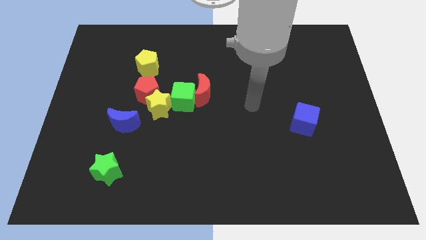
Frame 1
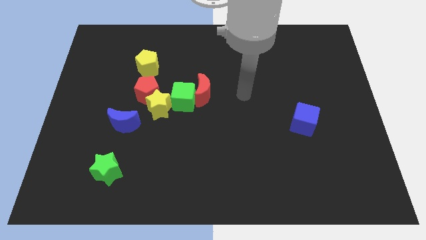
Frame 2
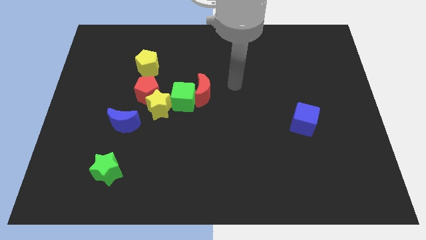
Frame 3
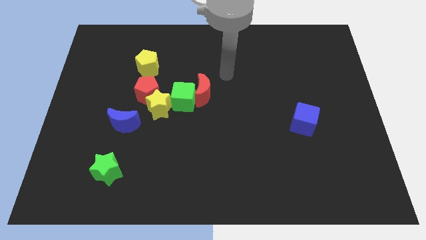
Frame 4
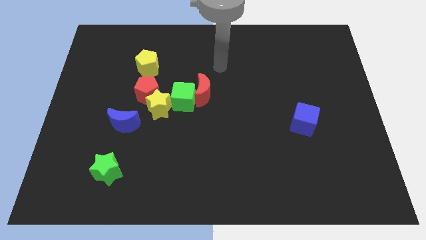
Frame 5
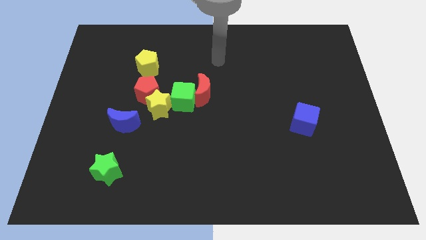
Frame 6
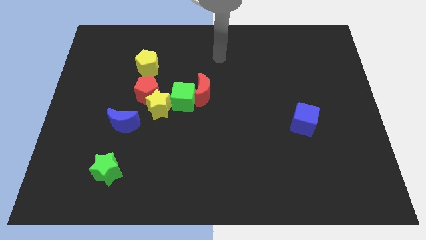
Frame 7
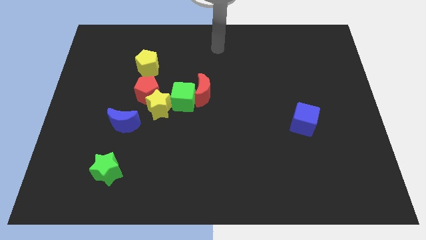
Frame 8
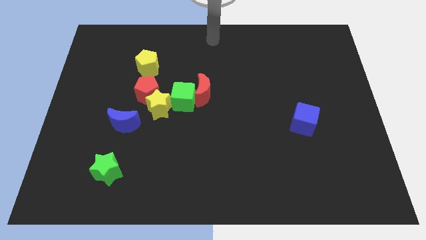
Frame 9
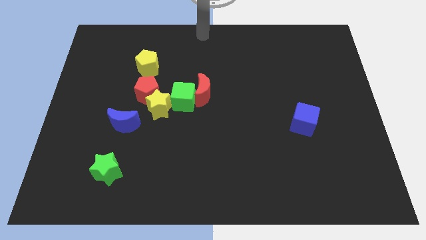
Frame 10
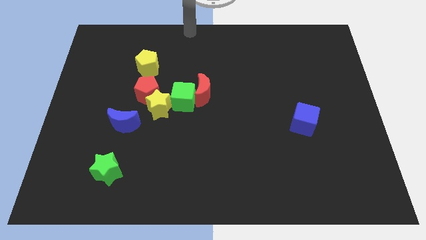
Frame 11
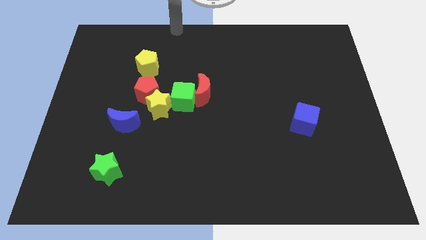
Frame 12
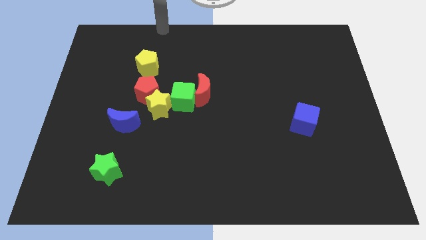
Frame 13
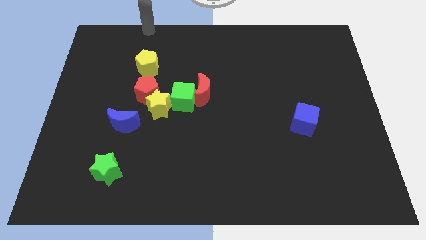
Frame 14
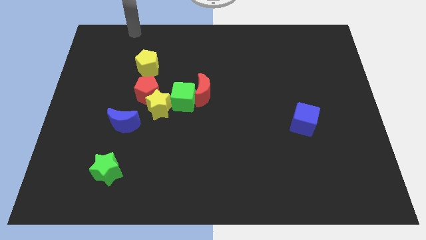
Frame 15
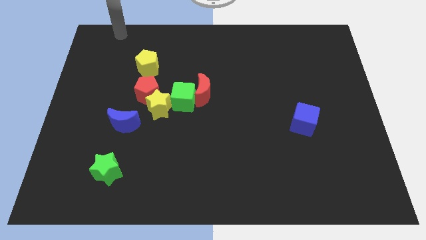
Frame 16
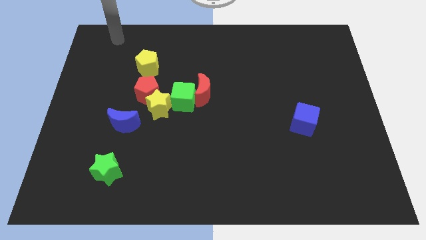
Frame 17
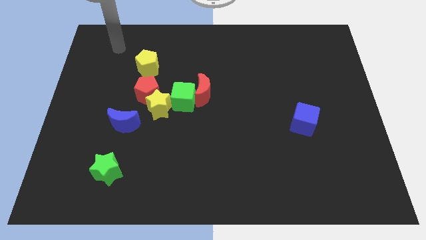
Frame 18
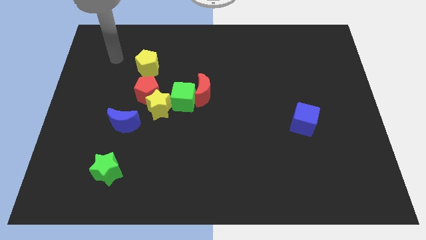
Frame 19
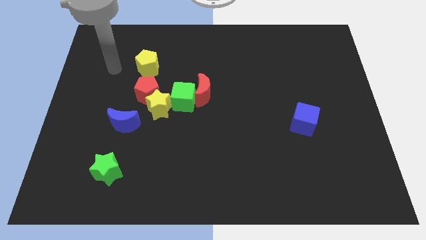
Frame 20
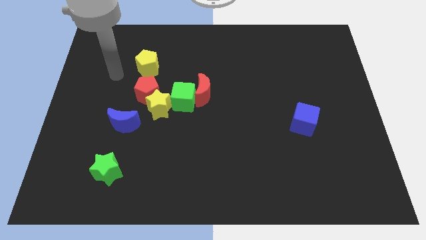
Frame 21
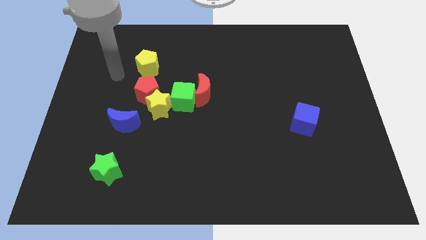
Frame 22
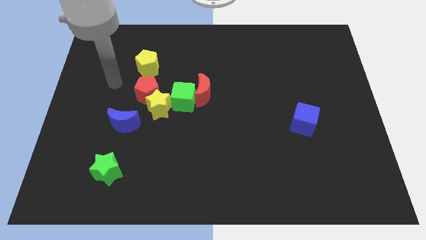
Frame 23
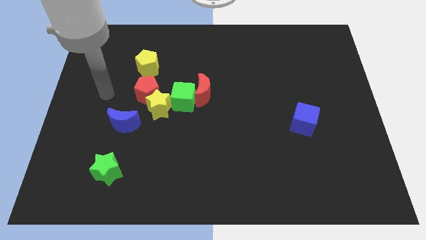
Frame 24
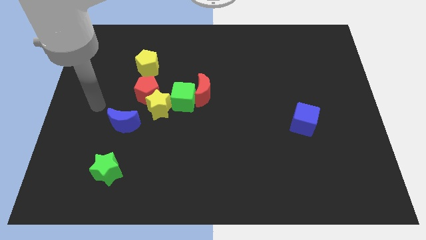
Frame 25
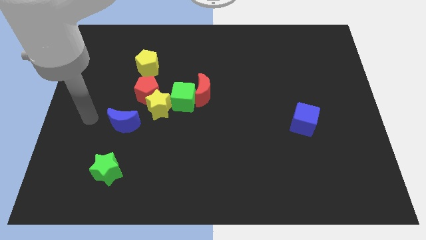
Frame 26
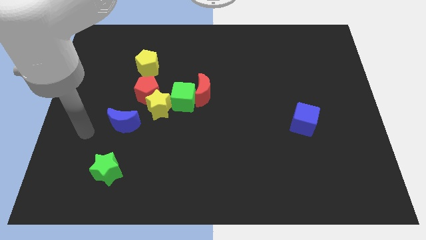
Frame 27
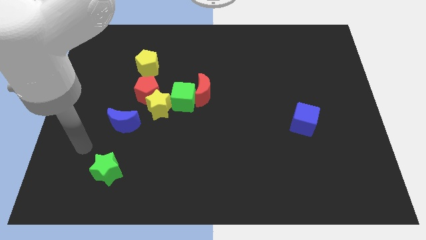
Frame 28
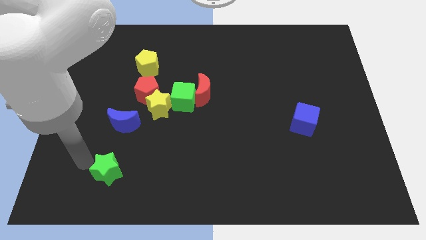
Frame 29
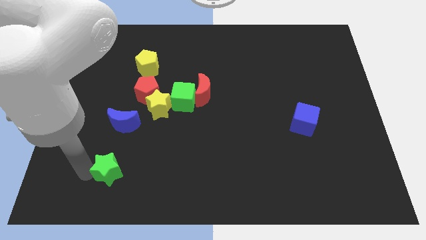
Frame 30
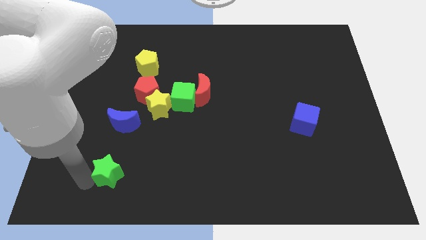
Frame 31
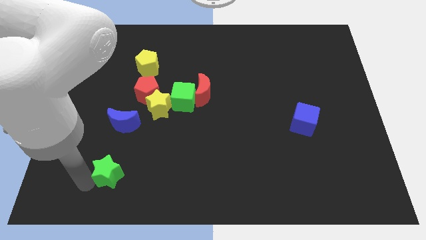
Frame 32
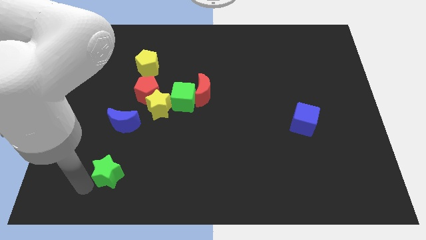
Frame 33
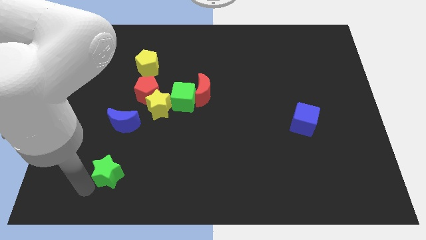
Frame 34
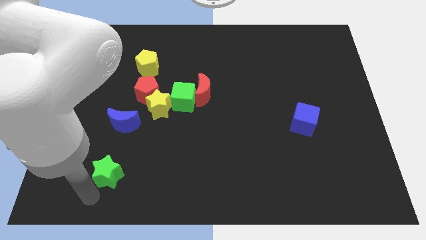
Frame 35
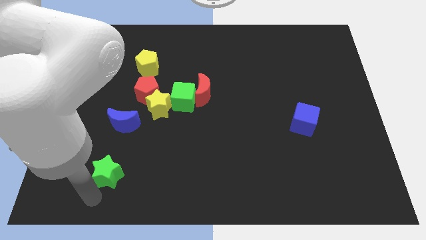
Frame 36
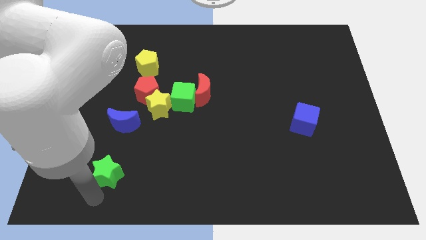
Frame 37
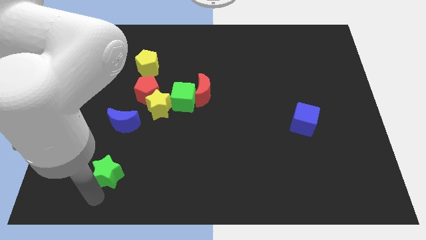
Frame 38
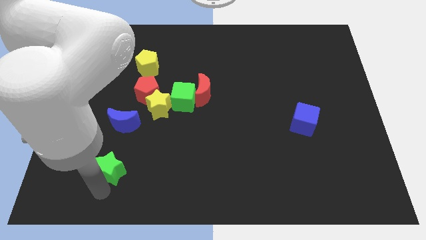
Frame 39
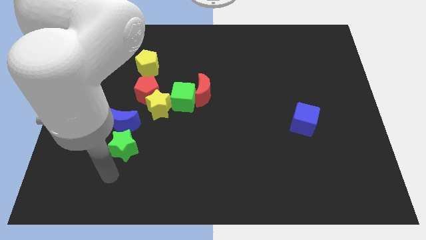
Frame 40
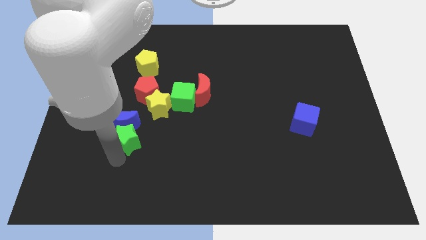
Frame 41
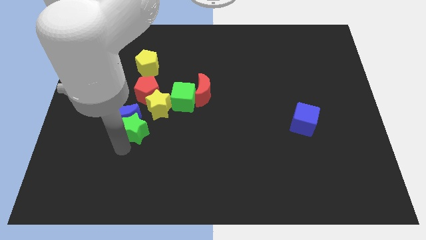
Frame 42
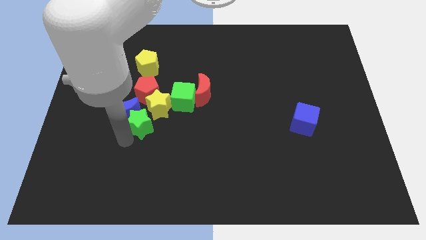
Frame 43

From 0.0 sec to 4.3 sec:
push the green star into the blue crescent

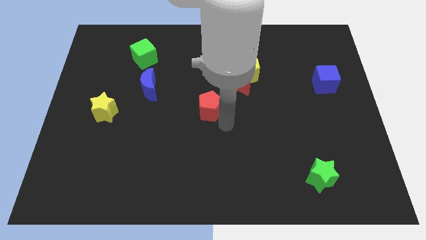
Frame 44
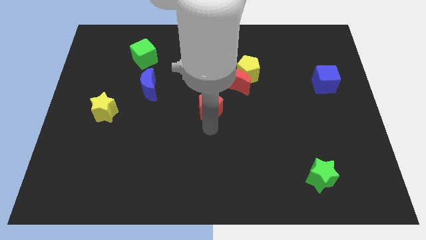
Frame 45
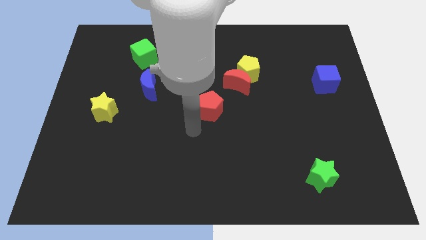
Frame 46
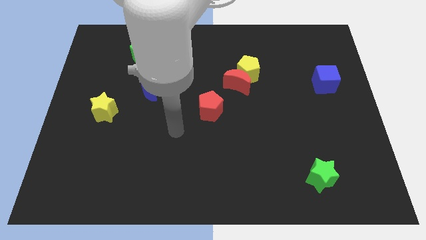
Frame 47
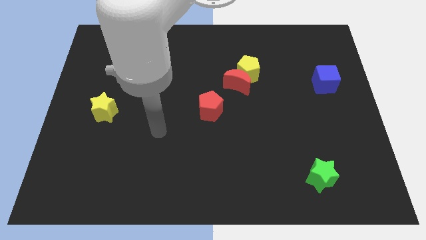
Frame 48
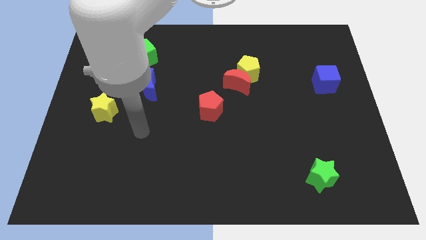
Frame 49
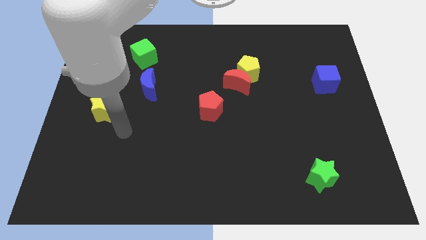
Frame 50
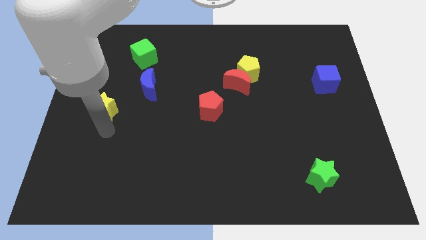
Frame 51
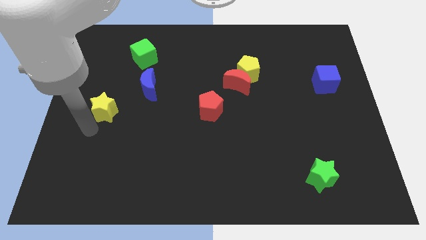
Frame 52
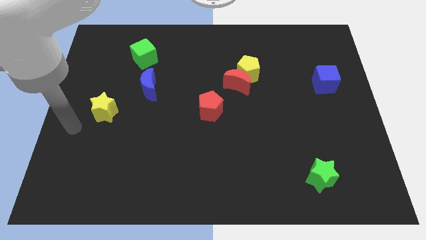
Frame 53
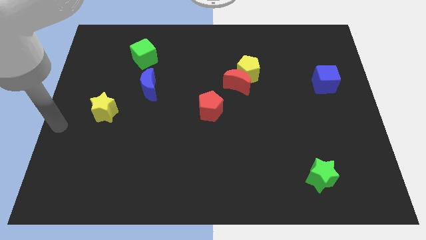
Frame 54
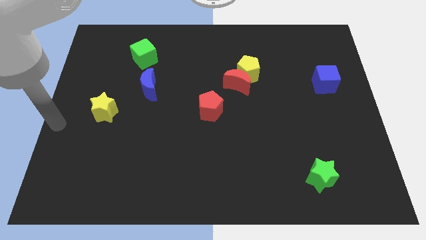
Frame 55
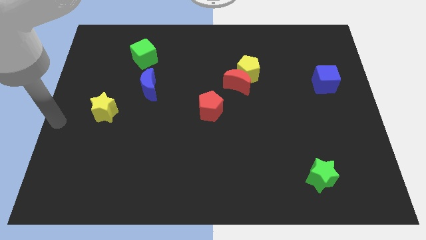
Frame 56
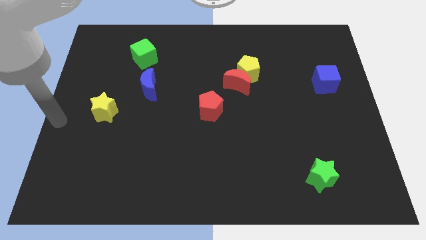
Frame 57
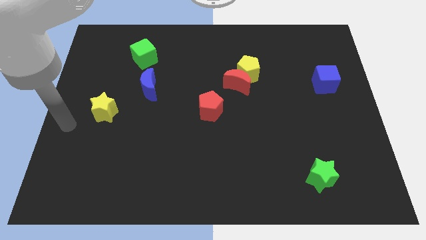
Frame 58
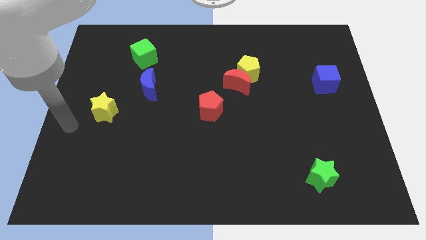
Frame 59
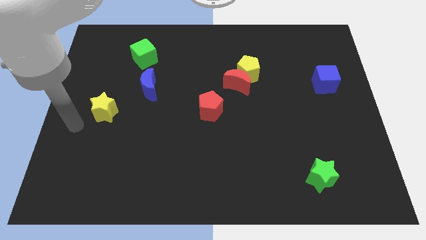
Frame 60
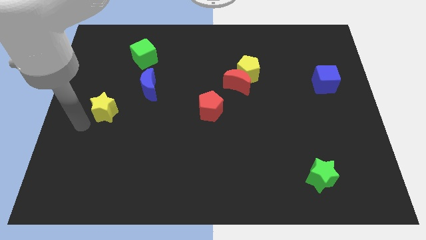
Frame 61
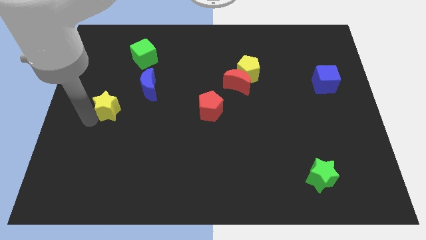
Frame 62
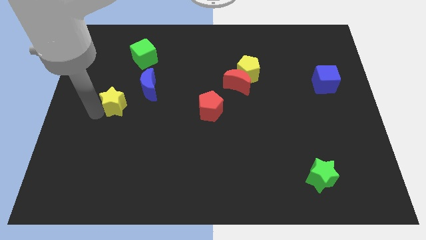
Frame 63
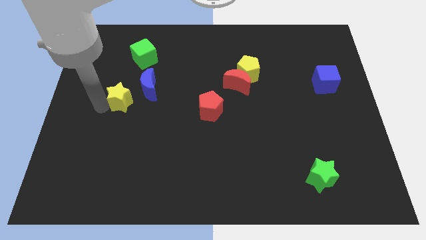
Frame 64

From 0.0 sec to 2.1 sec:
move the yellow star towards the left of the blue moon

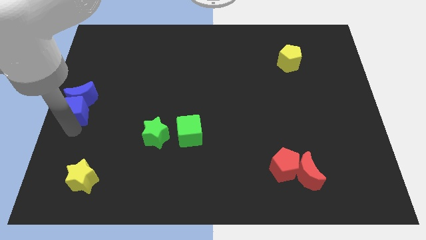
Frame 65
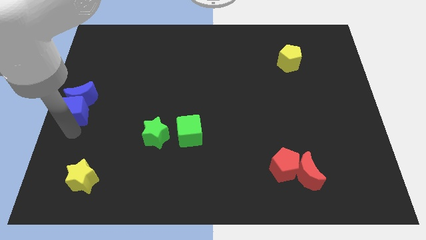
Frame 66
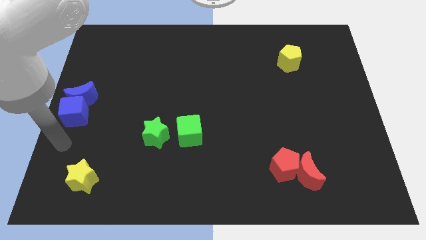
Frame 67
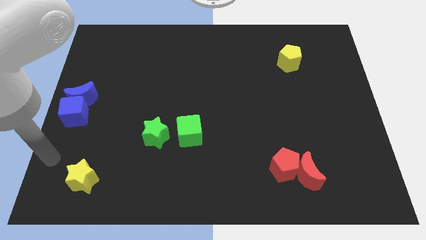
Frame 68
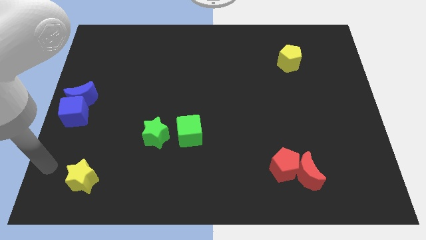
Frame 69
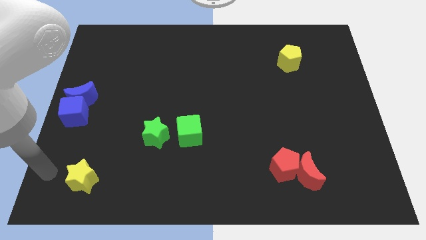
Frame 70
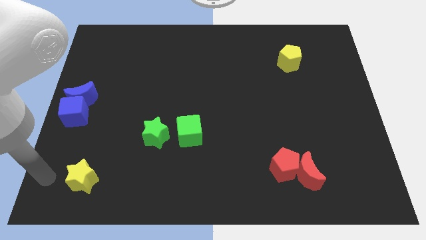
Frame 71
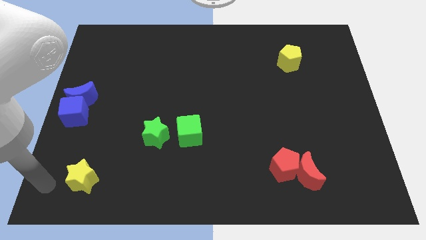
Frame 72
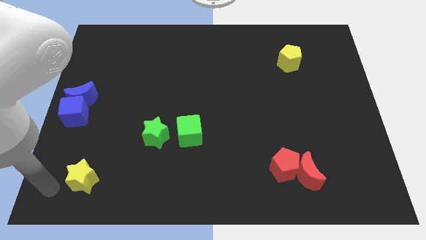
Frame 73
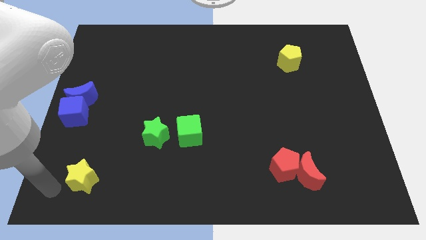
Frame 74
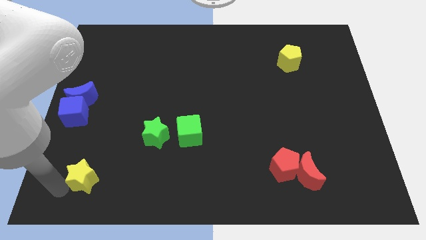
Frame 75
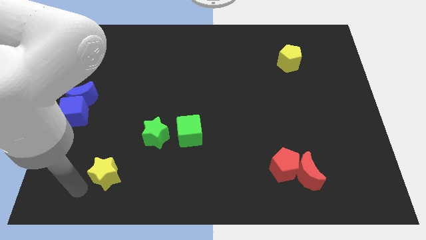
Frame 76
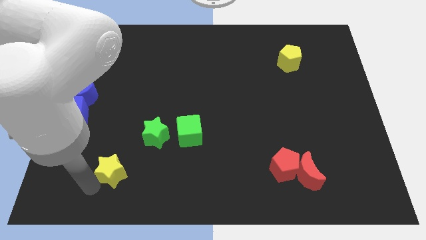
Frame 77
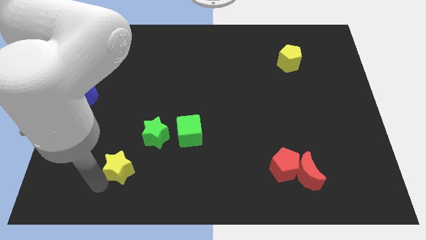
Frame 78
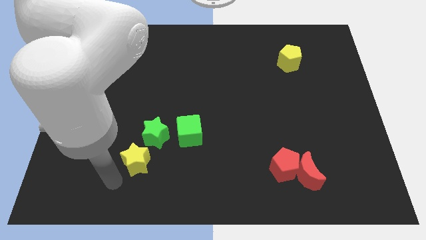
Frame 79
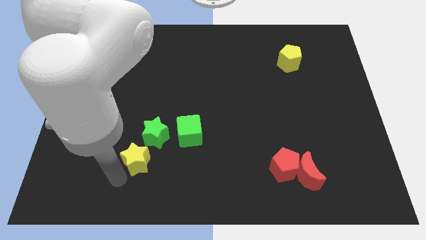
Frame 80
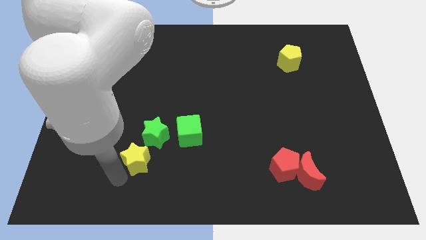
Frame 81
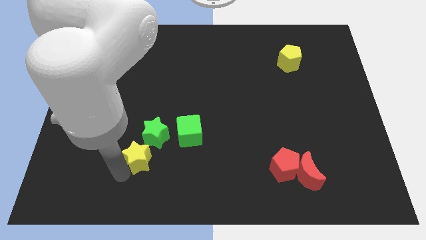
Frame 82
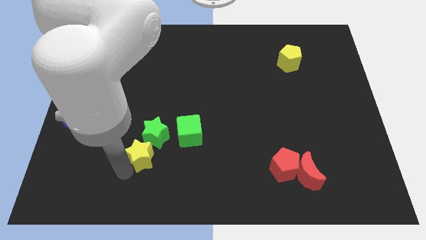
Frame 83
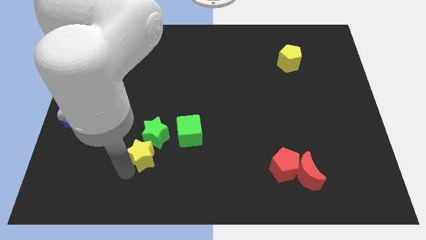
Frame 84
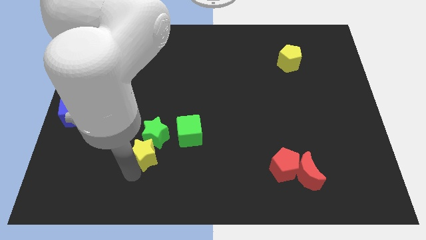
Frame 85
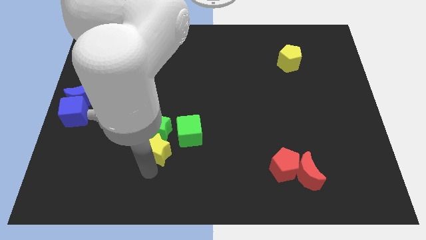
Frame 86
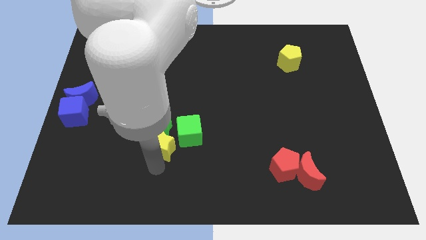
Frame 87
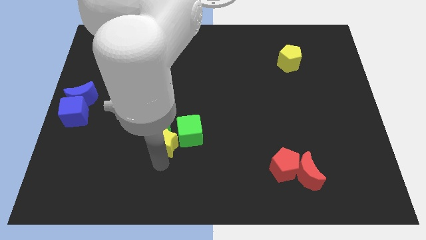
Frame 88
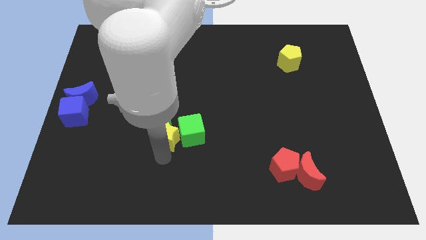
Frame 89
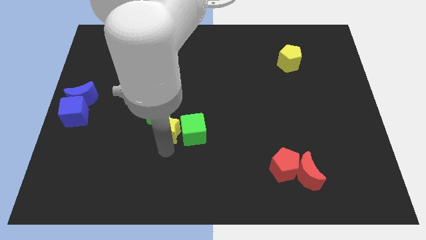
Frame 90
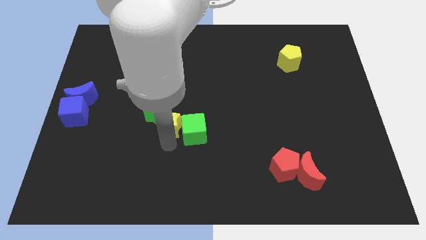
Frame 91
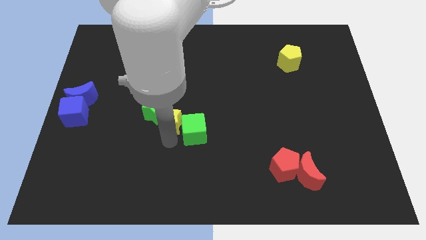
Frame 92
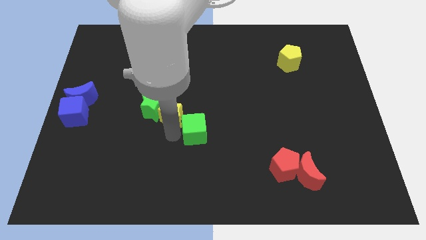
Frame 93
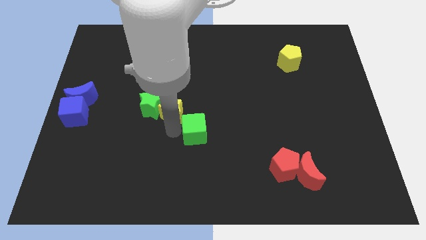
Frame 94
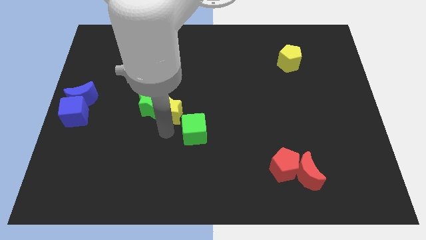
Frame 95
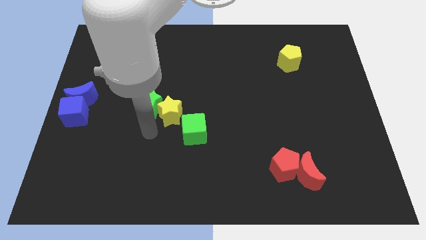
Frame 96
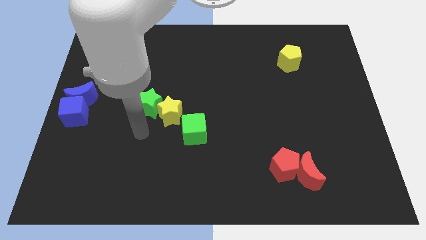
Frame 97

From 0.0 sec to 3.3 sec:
move the yellow star between green blocks
